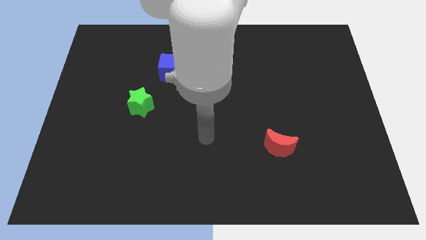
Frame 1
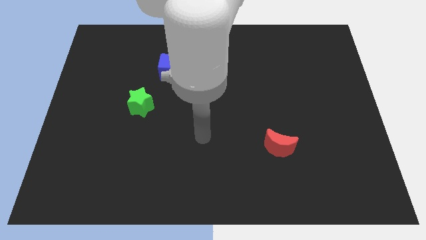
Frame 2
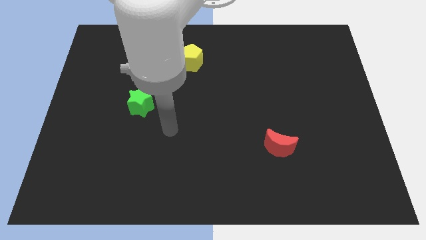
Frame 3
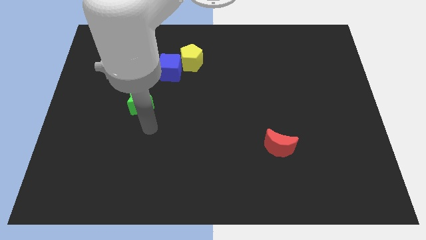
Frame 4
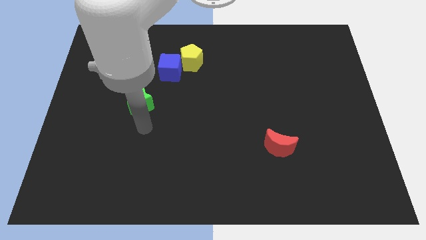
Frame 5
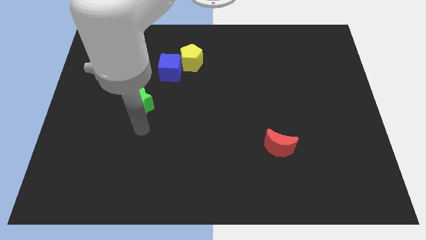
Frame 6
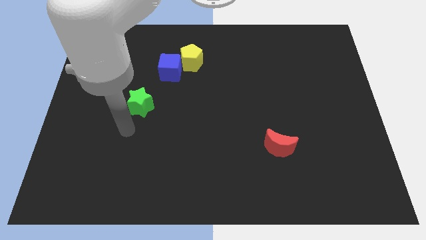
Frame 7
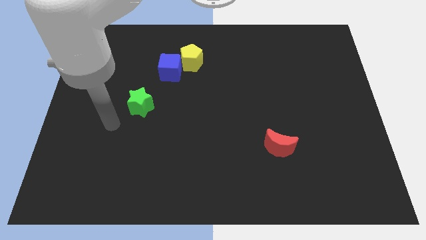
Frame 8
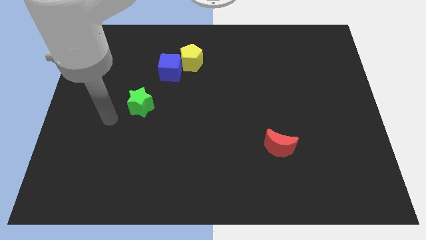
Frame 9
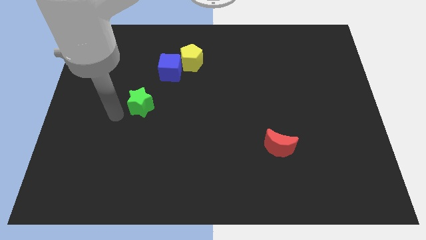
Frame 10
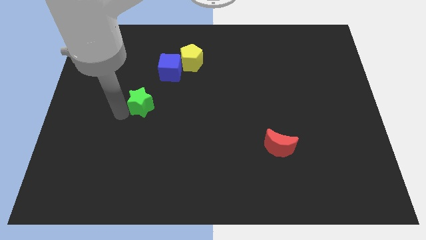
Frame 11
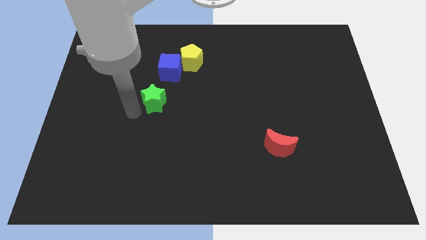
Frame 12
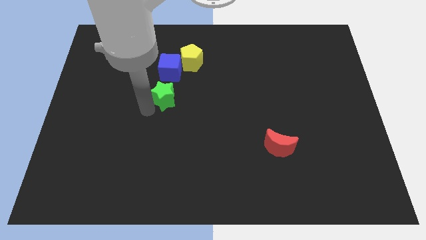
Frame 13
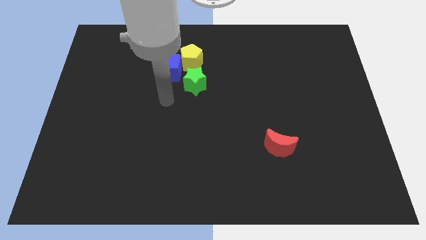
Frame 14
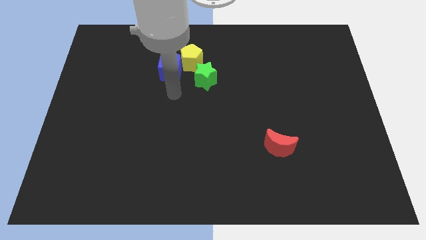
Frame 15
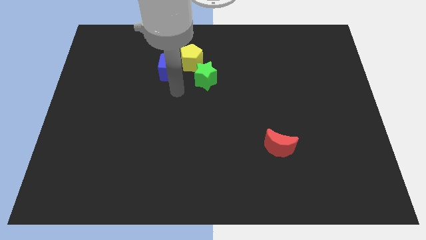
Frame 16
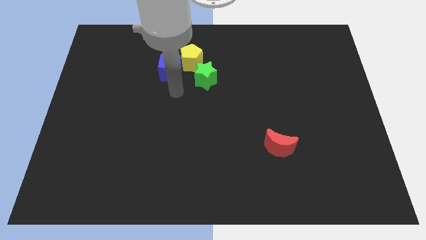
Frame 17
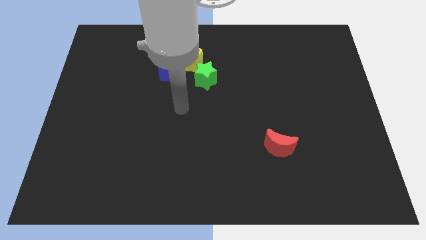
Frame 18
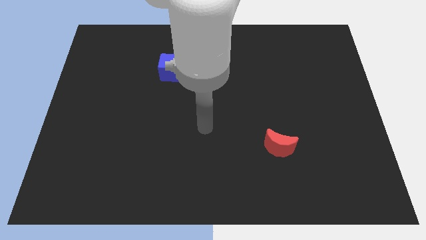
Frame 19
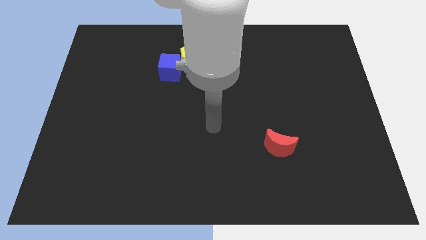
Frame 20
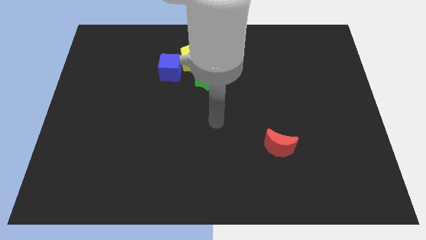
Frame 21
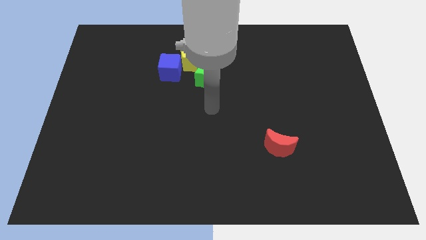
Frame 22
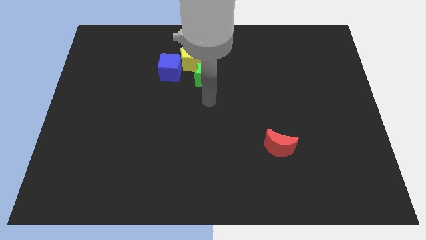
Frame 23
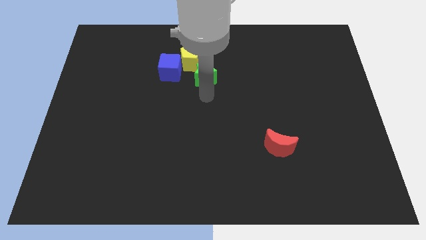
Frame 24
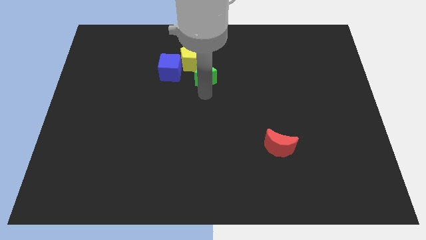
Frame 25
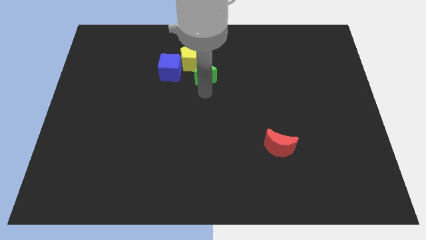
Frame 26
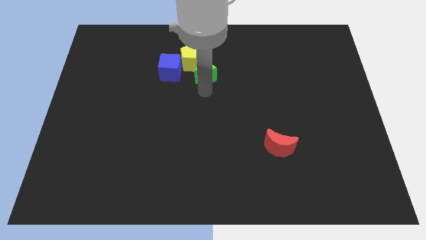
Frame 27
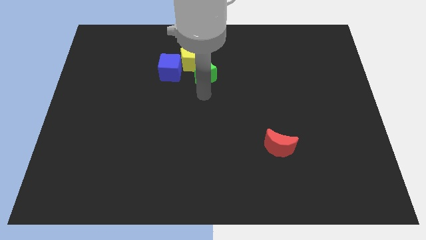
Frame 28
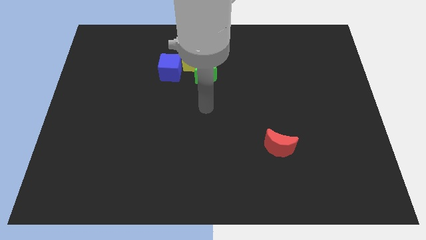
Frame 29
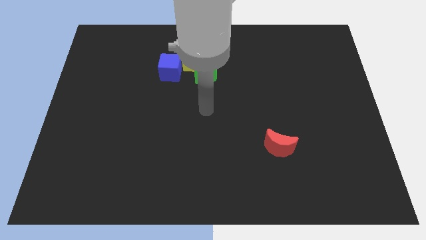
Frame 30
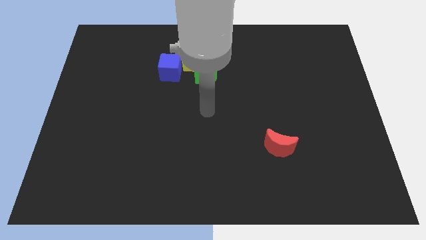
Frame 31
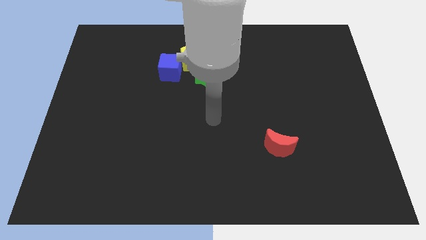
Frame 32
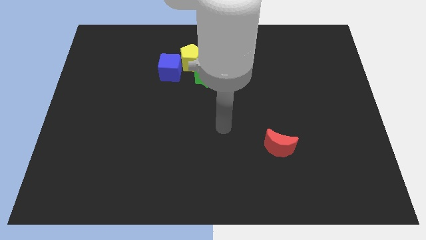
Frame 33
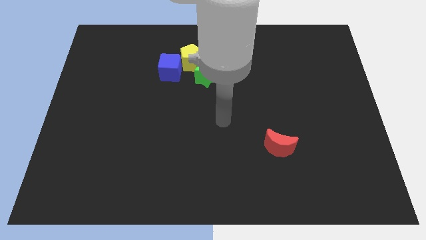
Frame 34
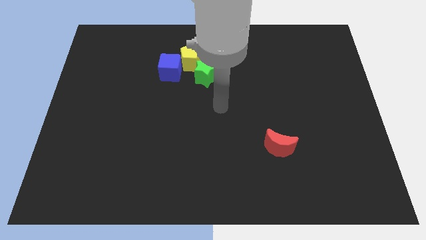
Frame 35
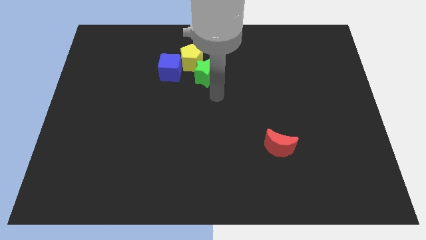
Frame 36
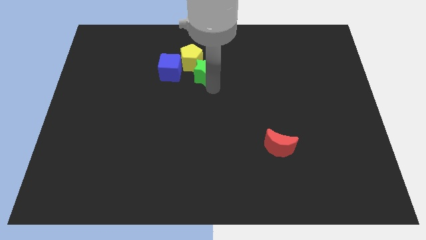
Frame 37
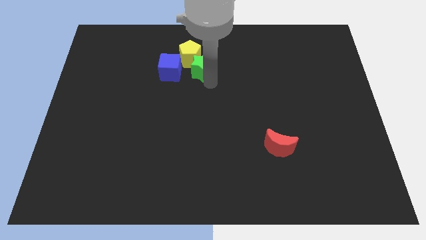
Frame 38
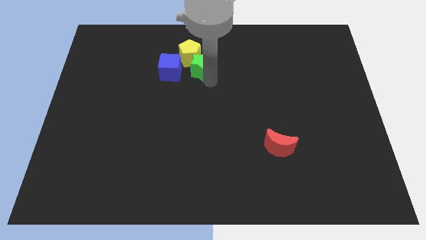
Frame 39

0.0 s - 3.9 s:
slide the star close to the pentagon

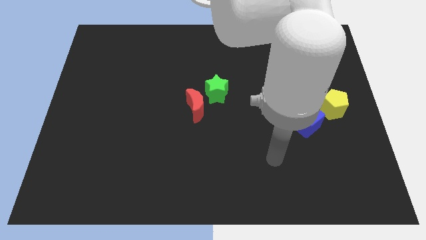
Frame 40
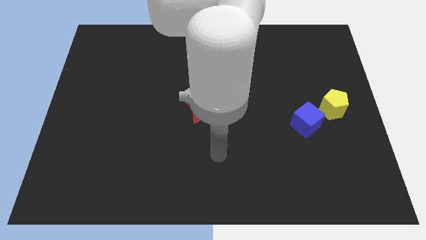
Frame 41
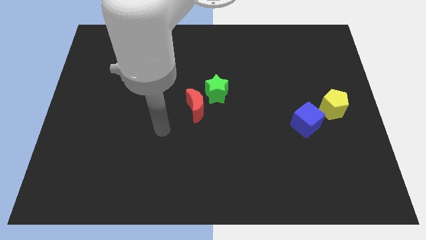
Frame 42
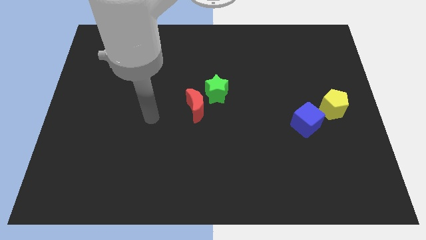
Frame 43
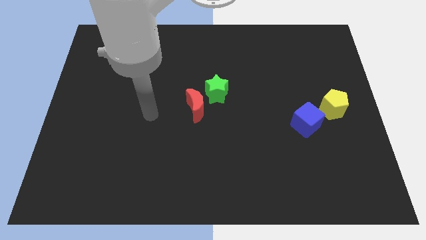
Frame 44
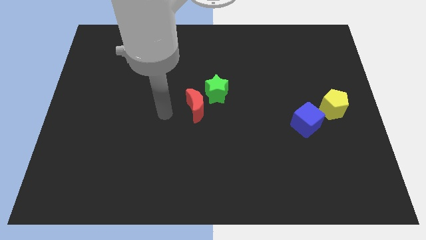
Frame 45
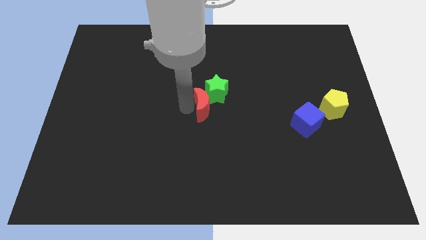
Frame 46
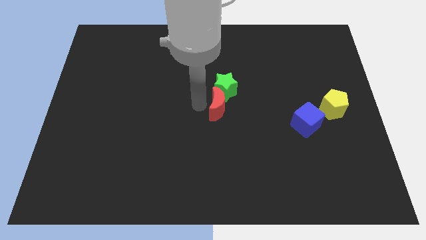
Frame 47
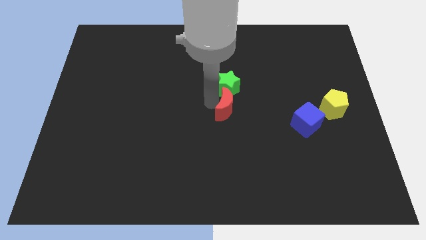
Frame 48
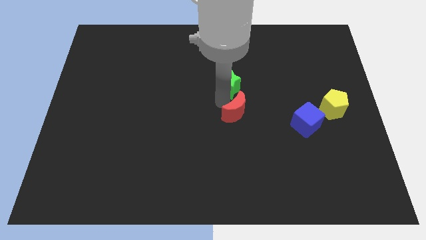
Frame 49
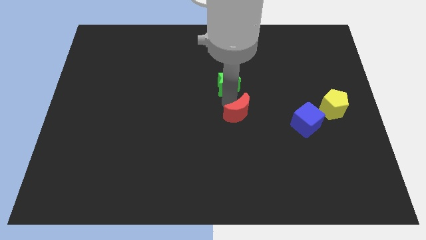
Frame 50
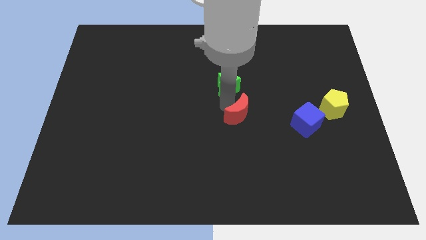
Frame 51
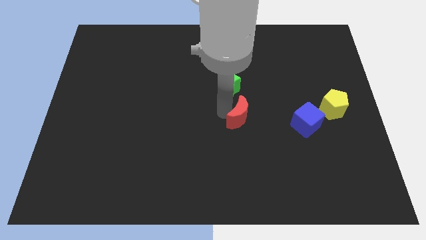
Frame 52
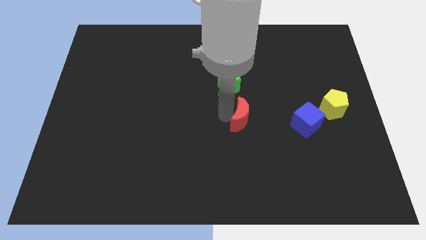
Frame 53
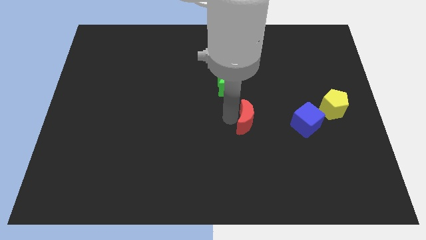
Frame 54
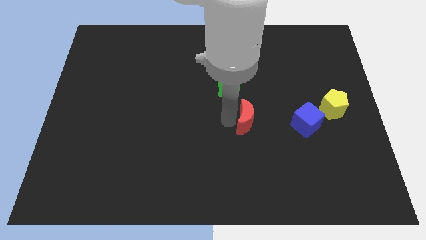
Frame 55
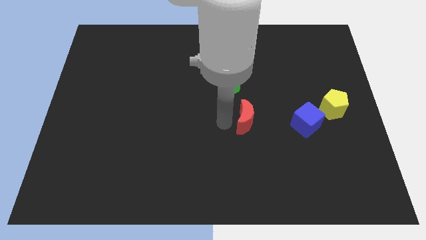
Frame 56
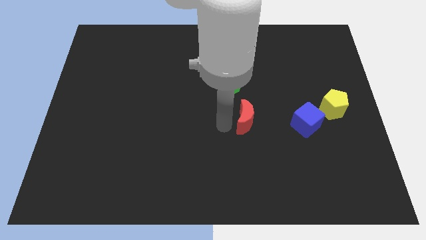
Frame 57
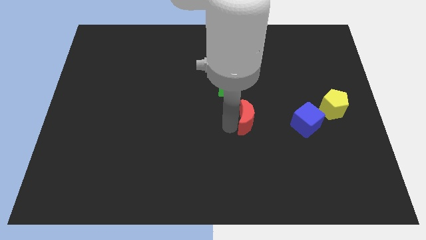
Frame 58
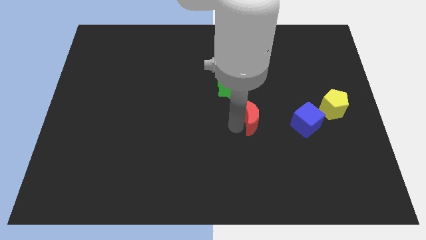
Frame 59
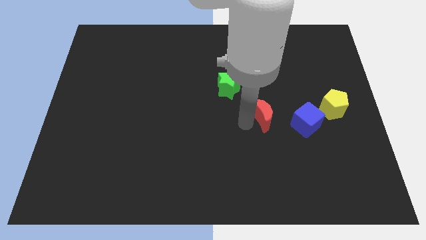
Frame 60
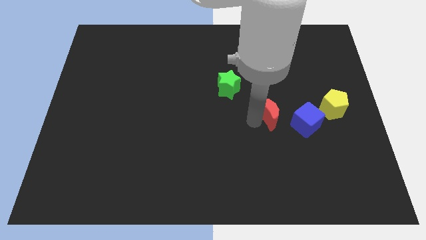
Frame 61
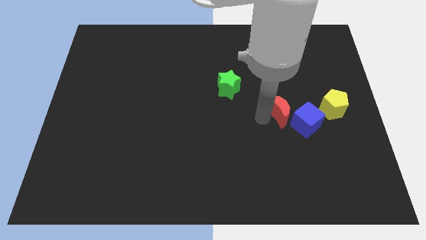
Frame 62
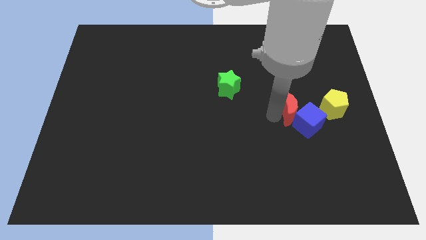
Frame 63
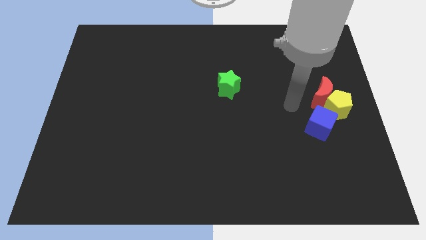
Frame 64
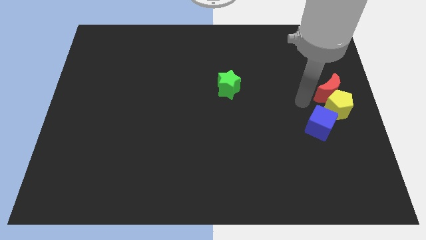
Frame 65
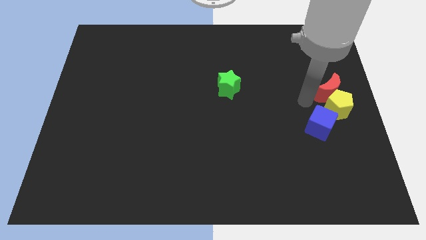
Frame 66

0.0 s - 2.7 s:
slide the moon close to the yellow block

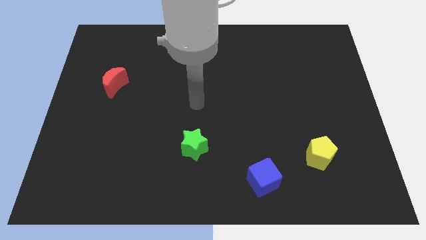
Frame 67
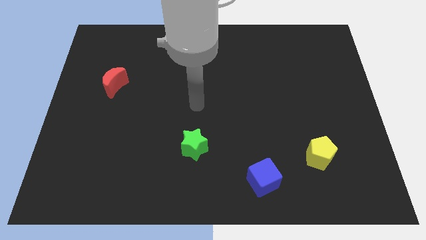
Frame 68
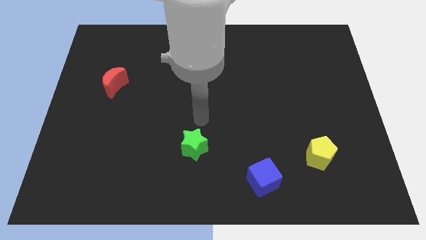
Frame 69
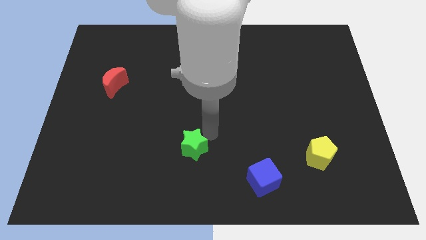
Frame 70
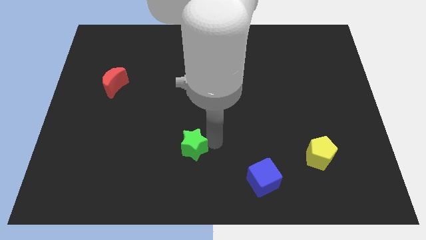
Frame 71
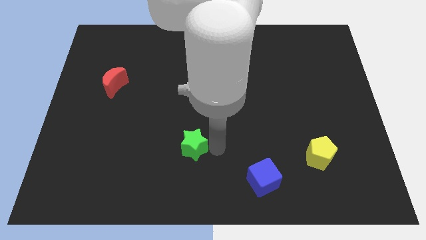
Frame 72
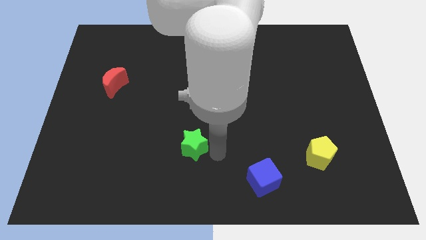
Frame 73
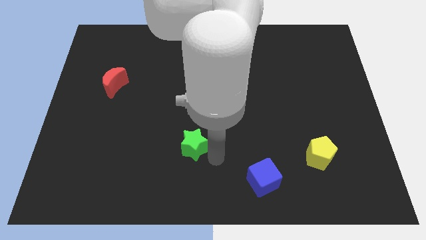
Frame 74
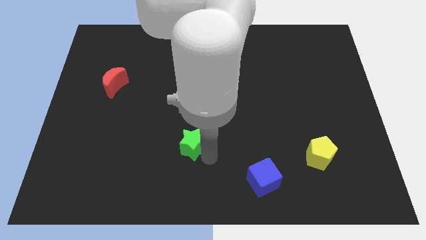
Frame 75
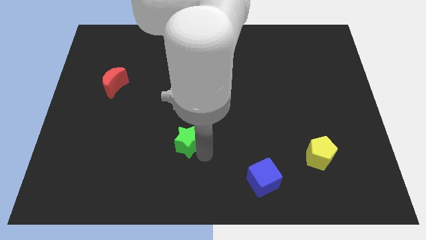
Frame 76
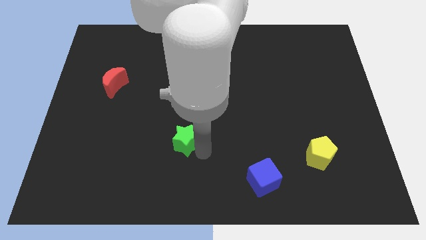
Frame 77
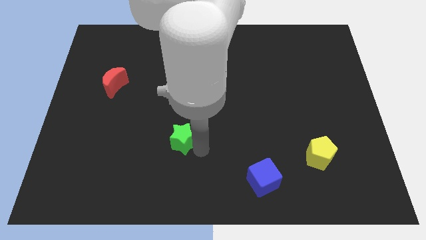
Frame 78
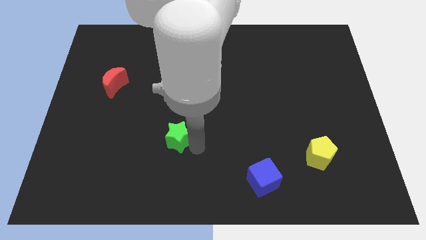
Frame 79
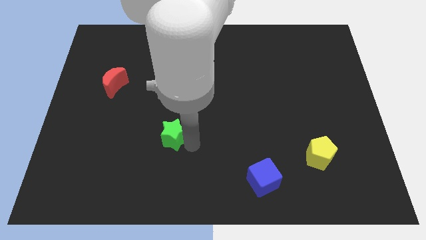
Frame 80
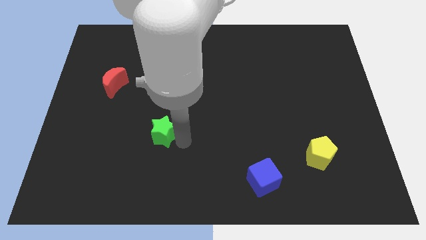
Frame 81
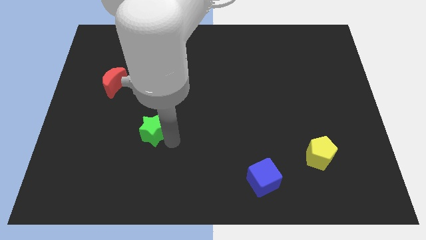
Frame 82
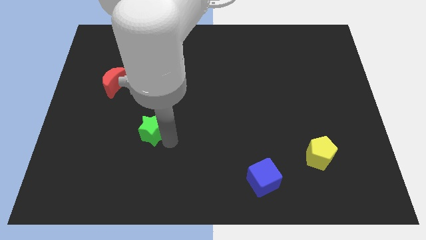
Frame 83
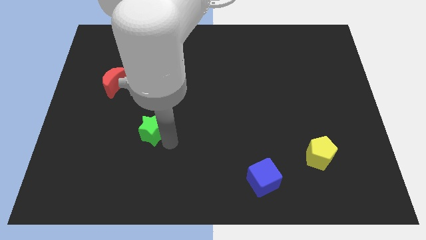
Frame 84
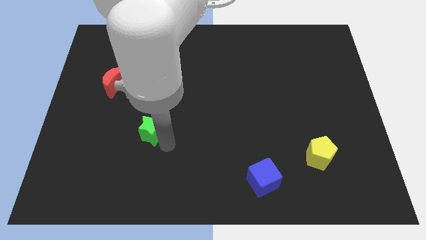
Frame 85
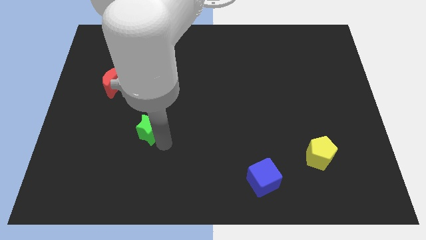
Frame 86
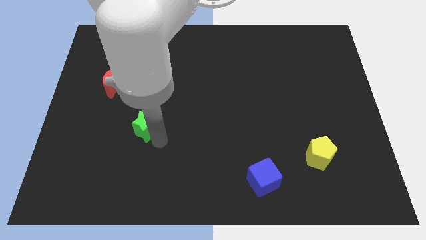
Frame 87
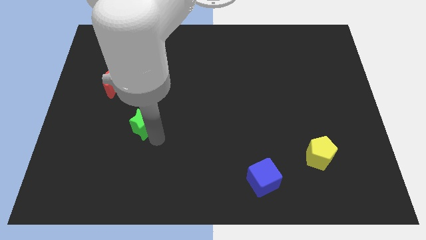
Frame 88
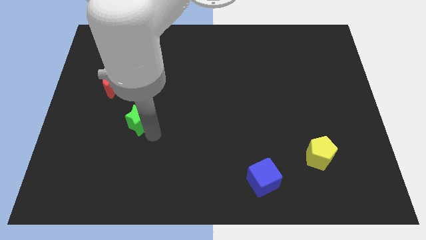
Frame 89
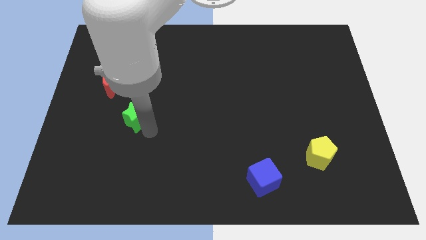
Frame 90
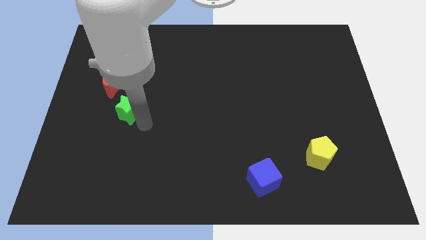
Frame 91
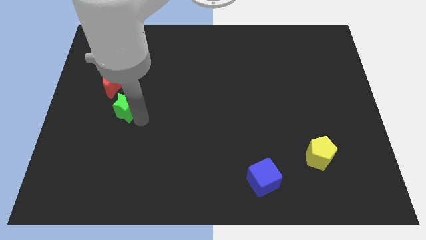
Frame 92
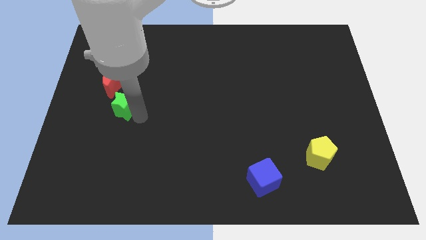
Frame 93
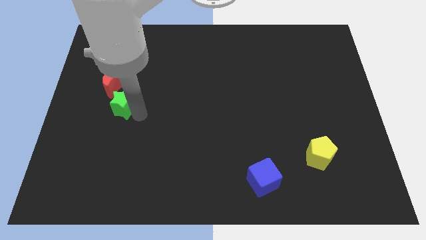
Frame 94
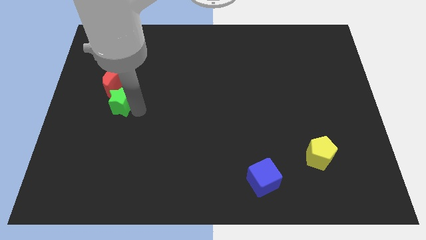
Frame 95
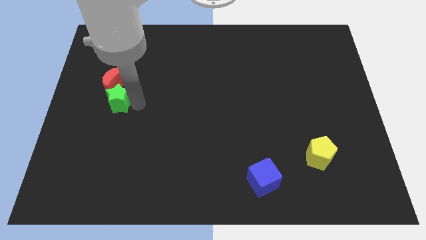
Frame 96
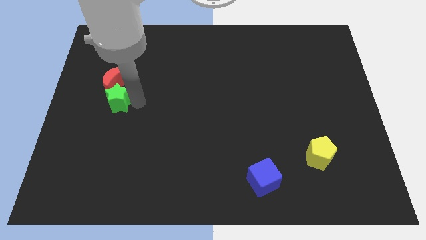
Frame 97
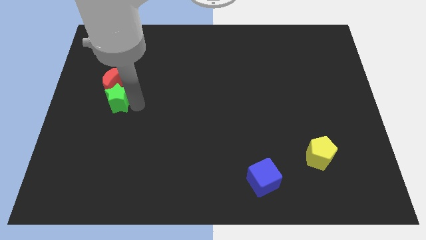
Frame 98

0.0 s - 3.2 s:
push the star next to the red block
